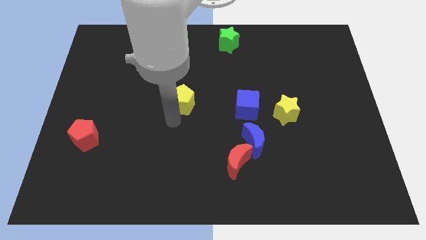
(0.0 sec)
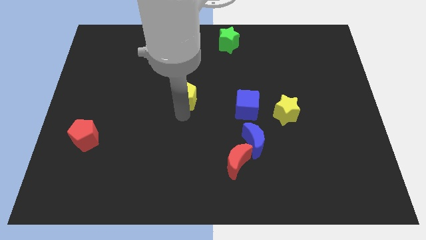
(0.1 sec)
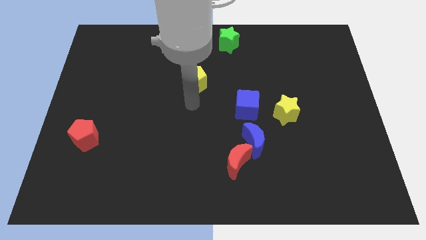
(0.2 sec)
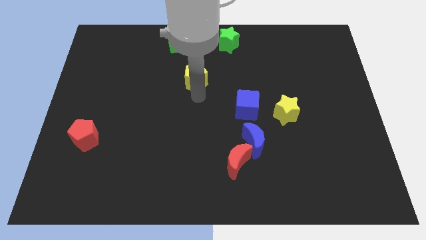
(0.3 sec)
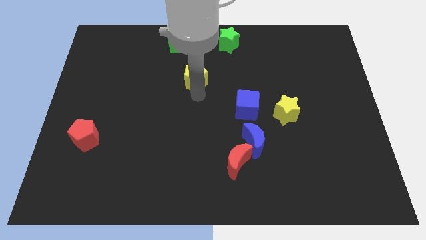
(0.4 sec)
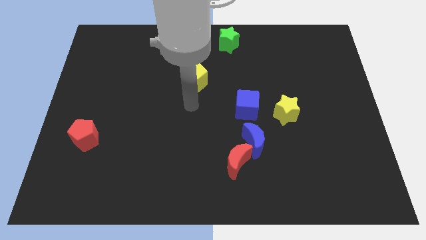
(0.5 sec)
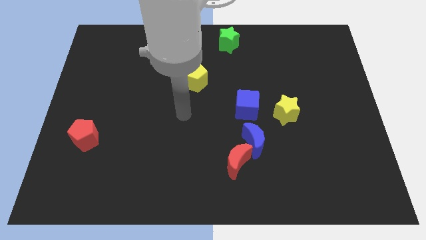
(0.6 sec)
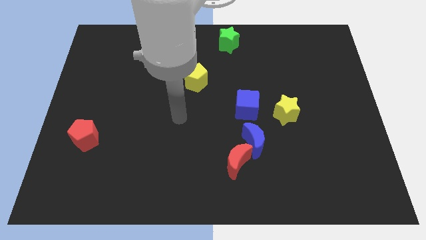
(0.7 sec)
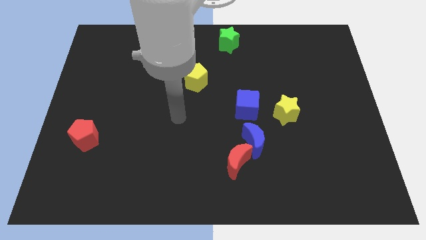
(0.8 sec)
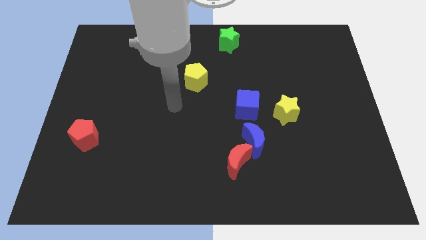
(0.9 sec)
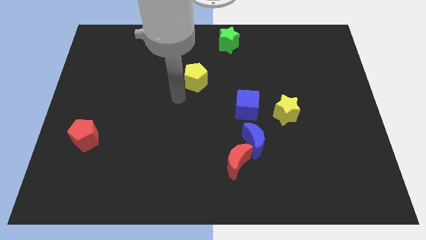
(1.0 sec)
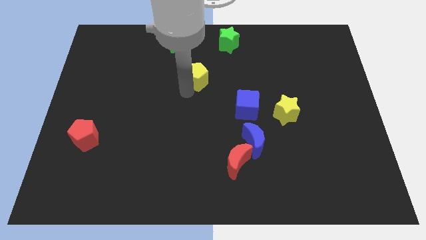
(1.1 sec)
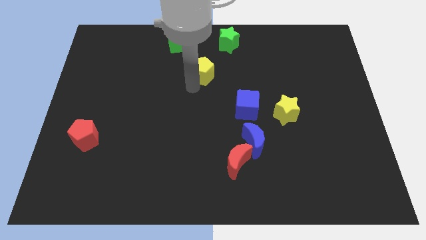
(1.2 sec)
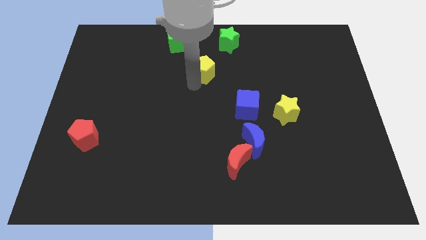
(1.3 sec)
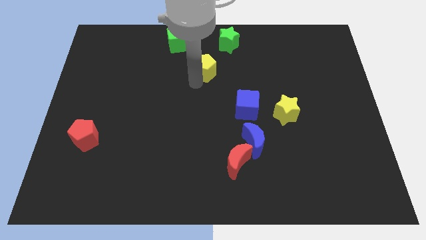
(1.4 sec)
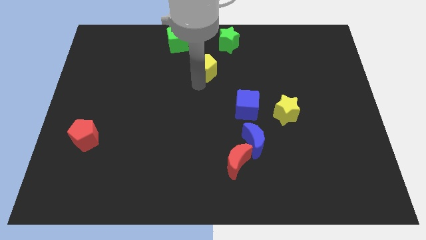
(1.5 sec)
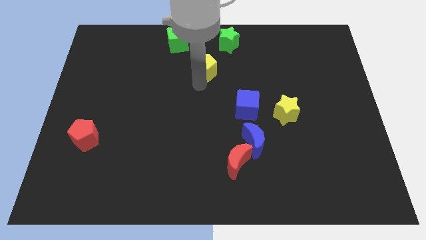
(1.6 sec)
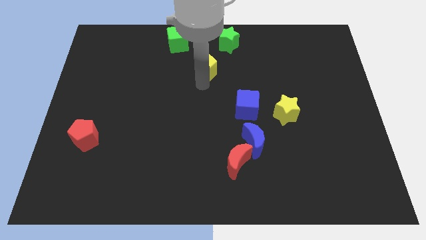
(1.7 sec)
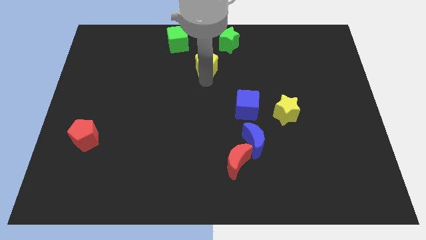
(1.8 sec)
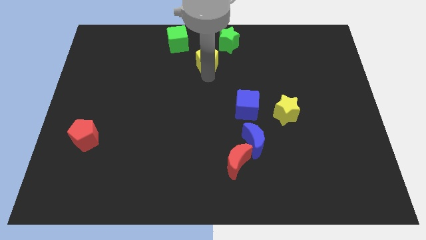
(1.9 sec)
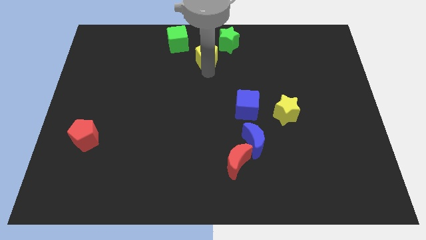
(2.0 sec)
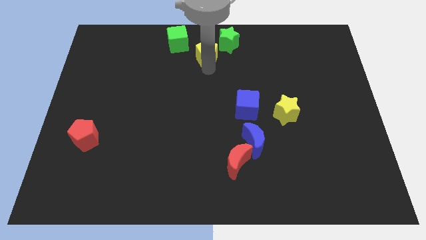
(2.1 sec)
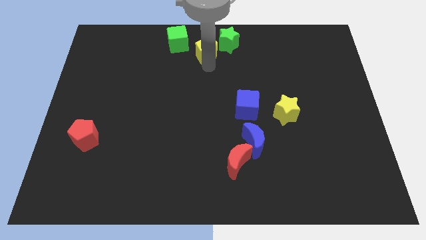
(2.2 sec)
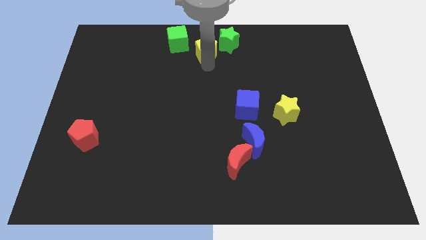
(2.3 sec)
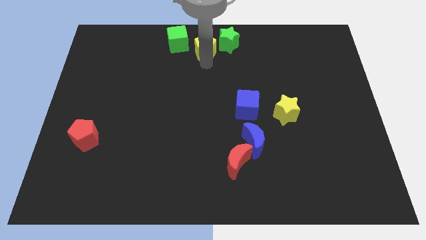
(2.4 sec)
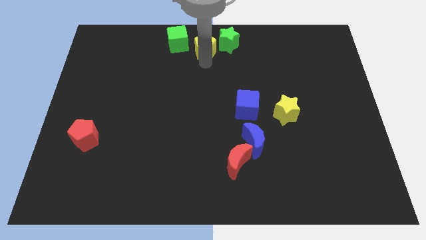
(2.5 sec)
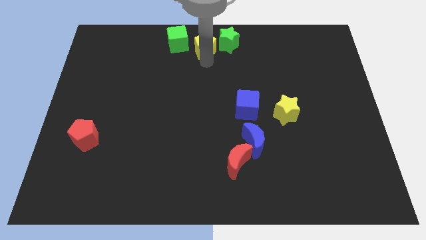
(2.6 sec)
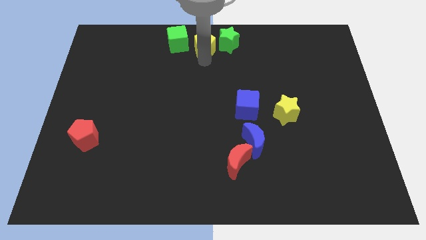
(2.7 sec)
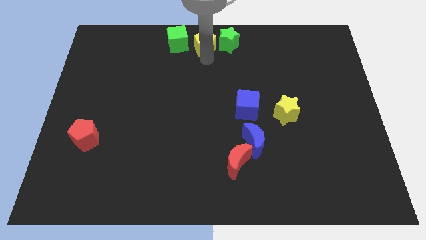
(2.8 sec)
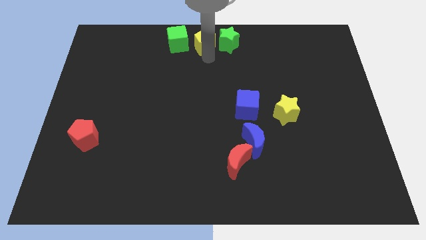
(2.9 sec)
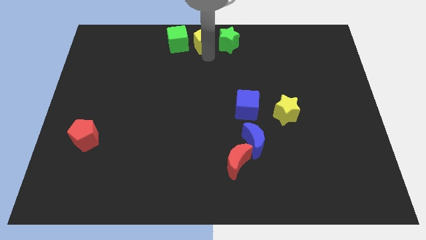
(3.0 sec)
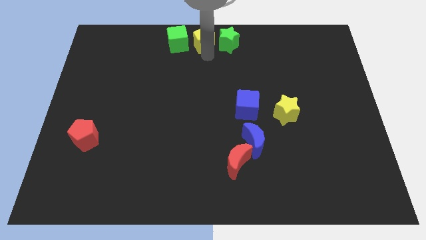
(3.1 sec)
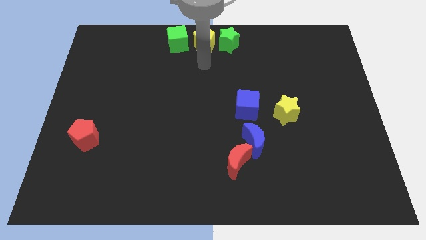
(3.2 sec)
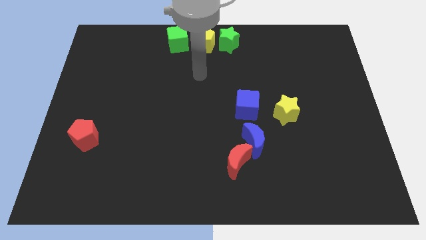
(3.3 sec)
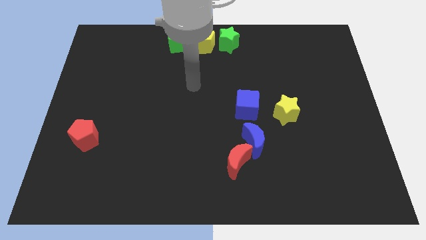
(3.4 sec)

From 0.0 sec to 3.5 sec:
put the yellow pentagon in between the both green blocks

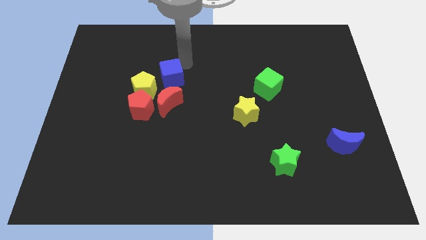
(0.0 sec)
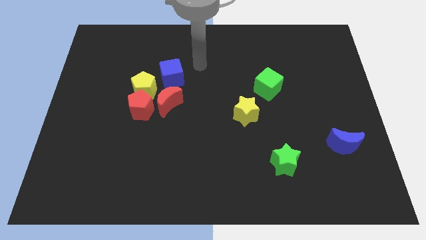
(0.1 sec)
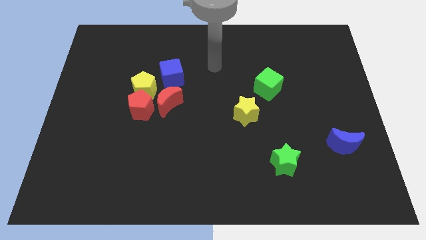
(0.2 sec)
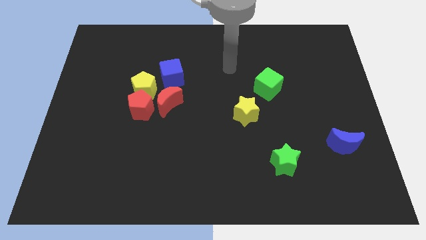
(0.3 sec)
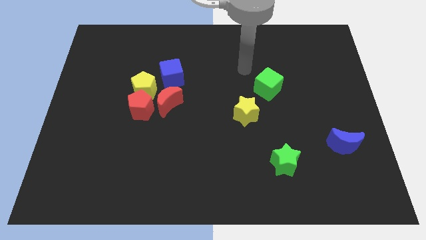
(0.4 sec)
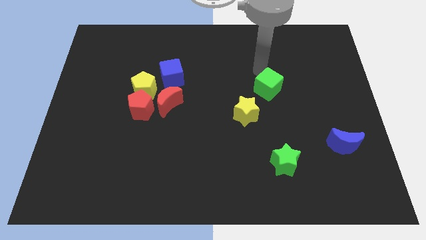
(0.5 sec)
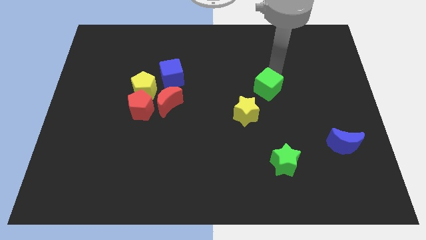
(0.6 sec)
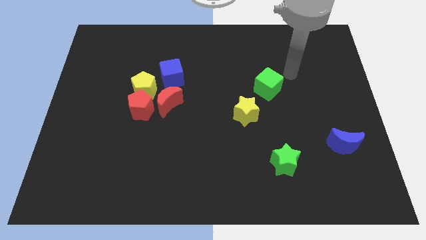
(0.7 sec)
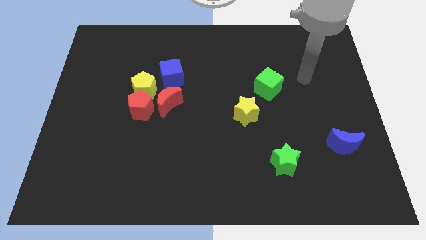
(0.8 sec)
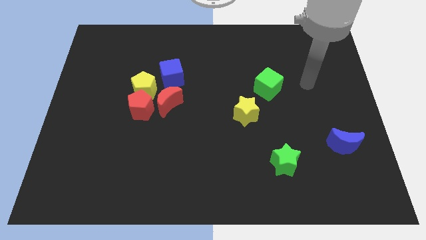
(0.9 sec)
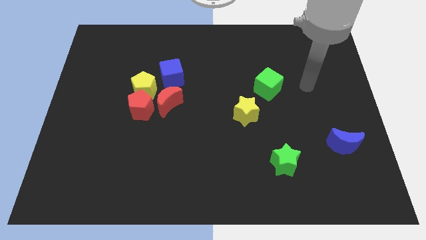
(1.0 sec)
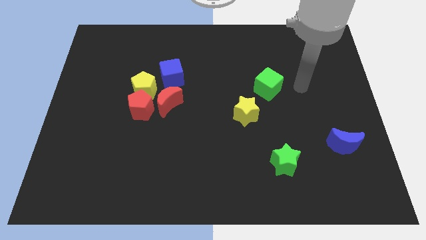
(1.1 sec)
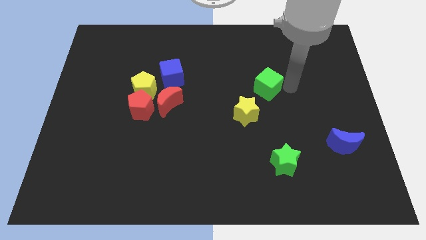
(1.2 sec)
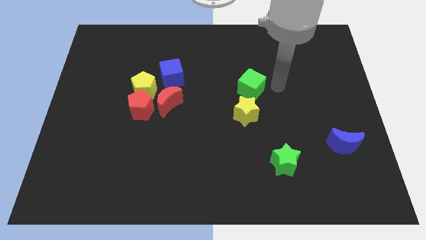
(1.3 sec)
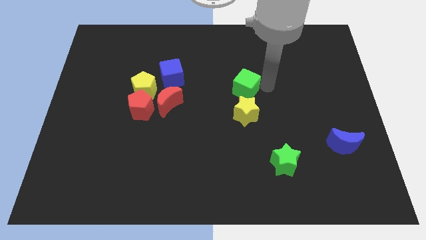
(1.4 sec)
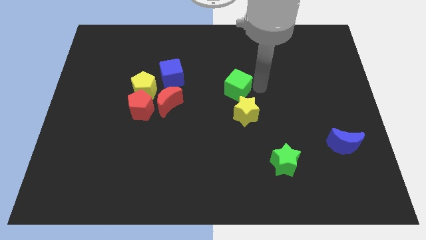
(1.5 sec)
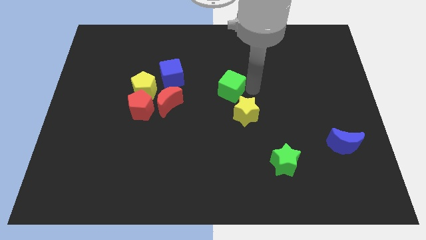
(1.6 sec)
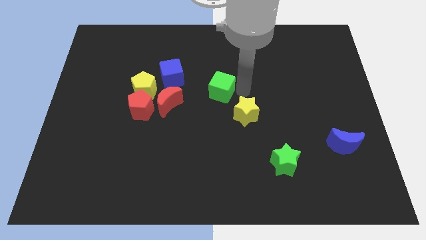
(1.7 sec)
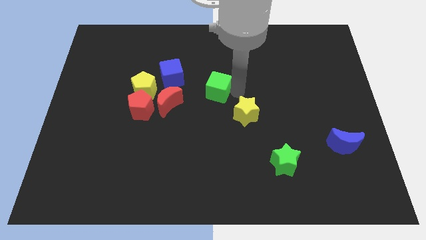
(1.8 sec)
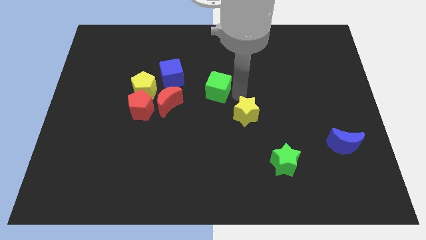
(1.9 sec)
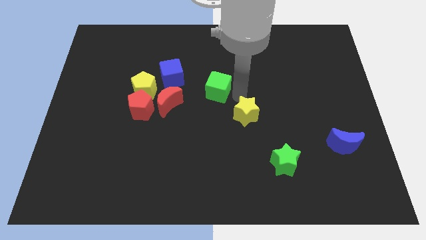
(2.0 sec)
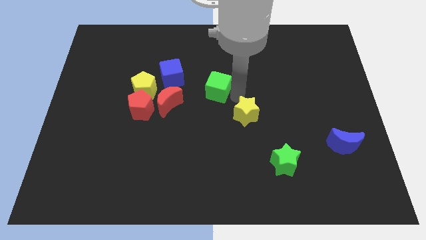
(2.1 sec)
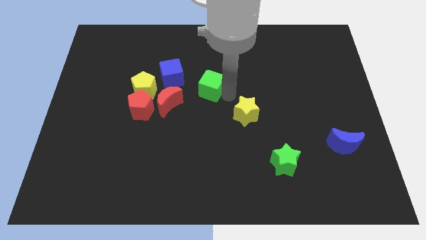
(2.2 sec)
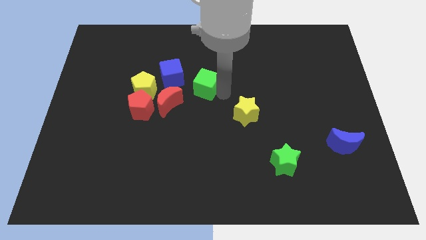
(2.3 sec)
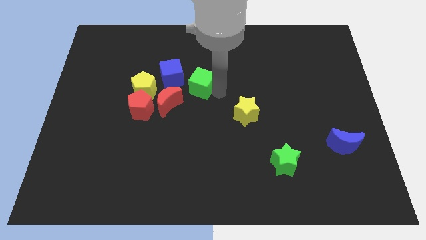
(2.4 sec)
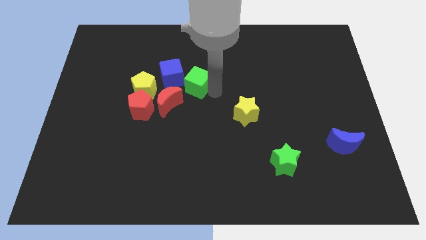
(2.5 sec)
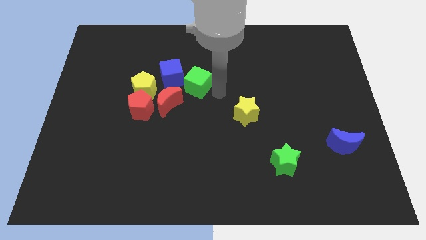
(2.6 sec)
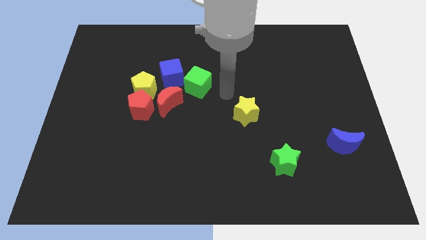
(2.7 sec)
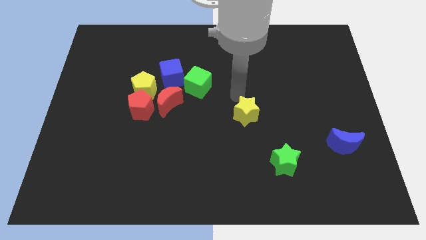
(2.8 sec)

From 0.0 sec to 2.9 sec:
place the green cube close to blue cube

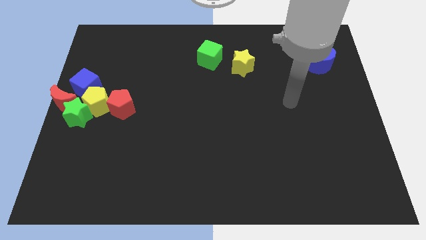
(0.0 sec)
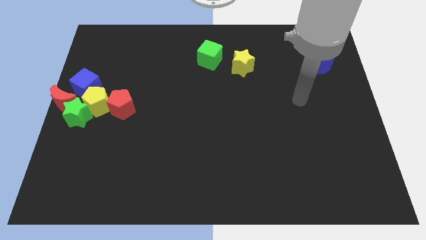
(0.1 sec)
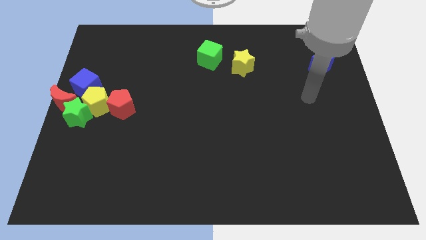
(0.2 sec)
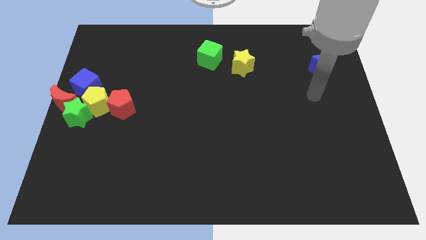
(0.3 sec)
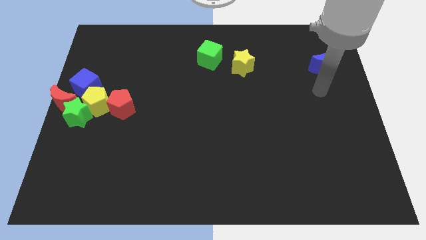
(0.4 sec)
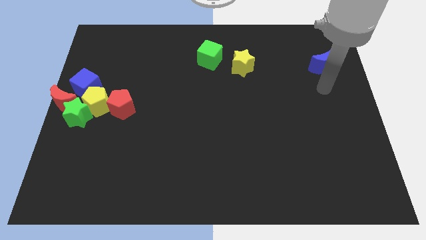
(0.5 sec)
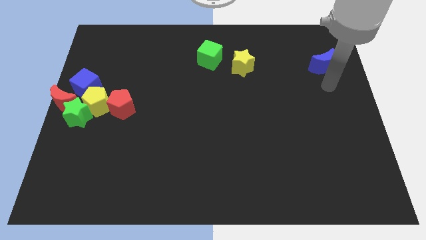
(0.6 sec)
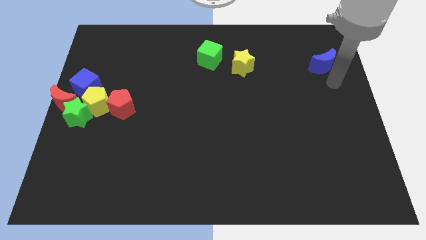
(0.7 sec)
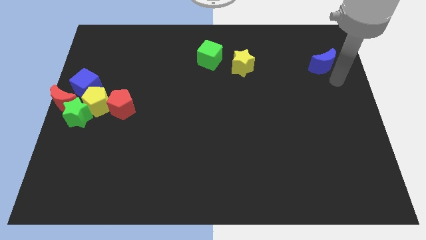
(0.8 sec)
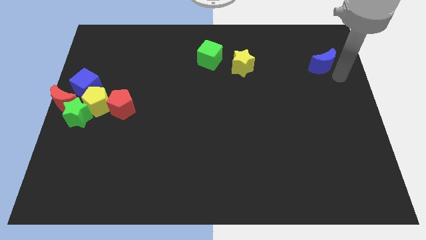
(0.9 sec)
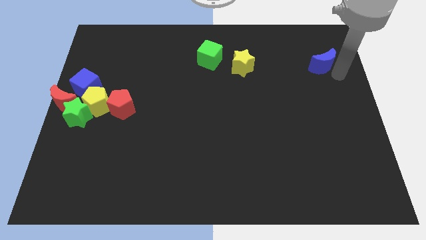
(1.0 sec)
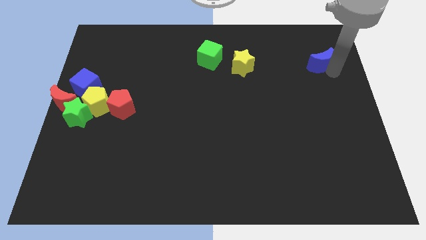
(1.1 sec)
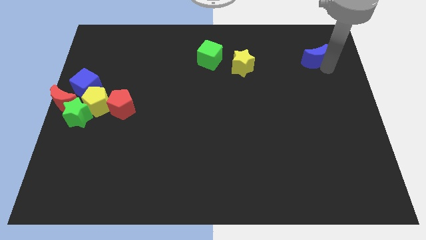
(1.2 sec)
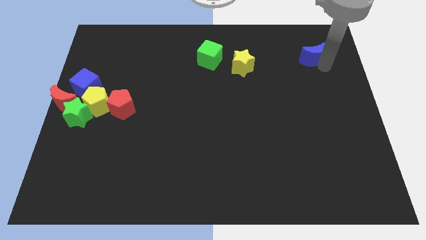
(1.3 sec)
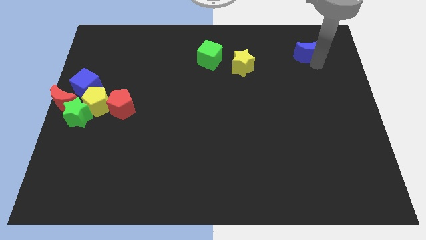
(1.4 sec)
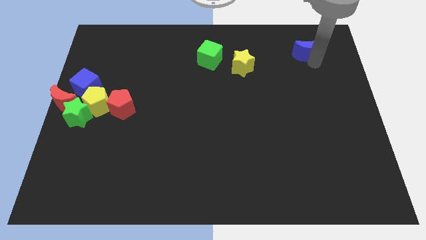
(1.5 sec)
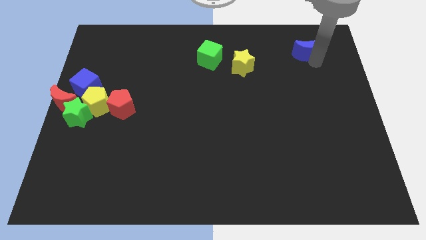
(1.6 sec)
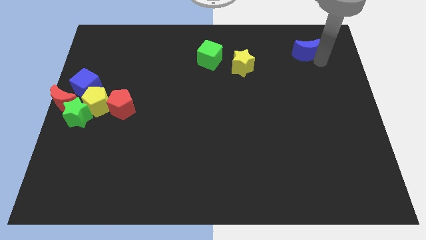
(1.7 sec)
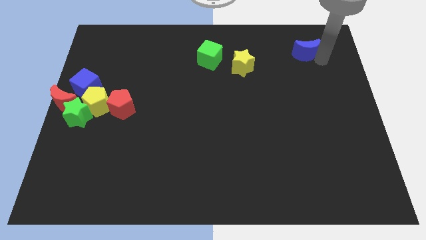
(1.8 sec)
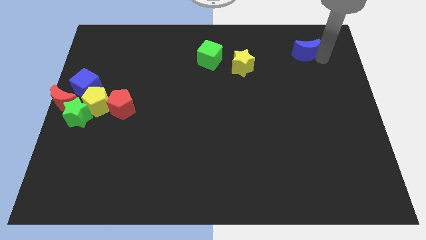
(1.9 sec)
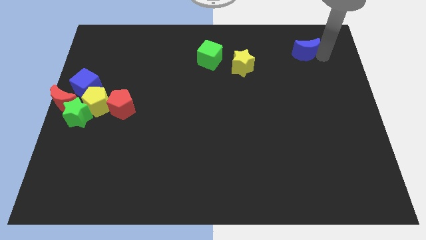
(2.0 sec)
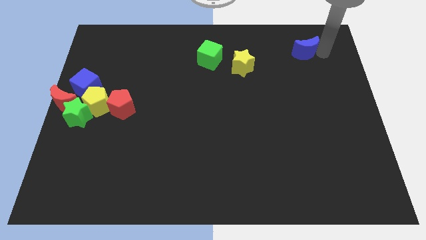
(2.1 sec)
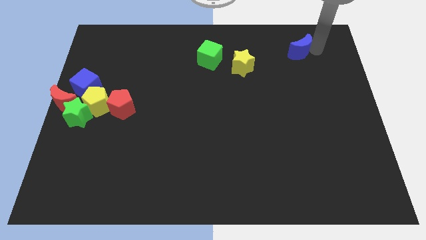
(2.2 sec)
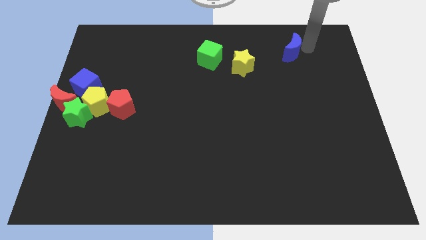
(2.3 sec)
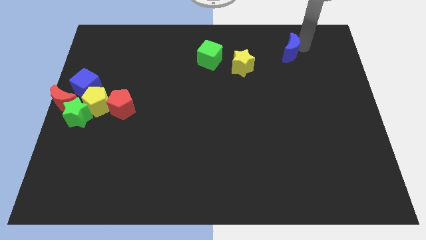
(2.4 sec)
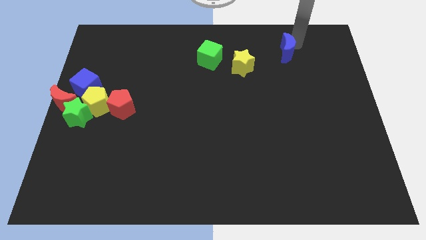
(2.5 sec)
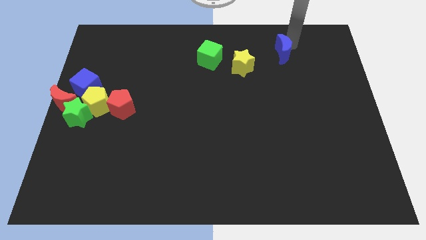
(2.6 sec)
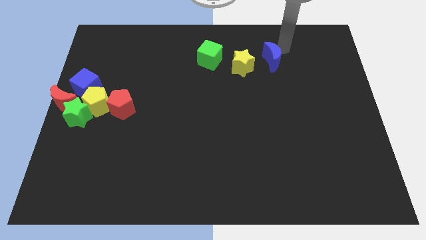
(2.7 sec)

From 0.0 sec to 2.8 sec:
move the blue moon towards the yellow star
